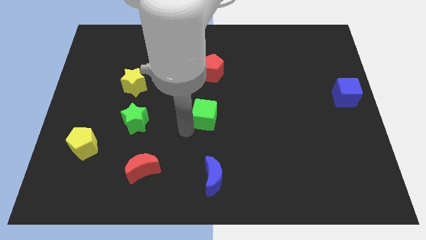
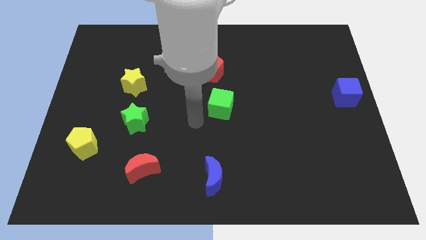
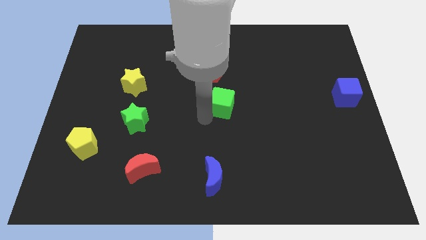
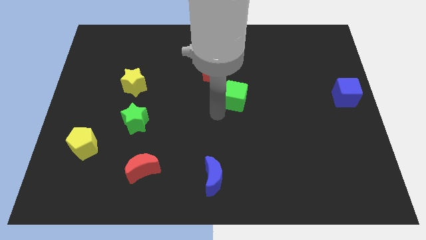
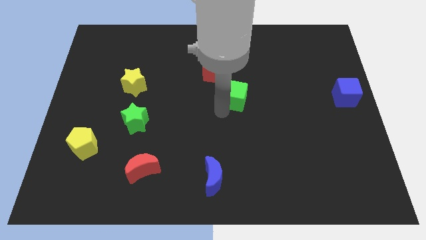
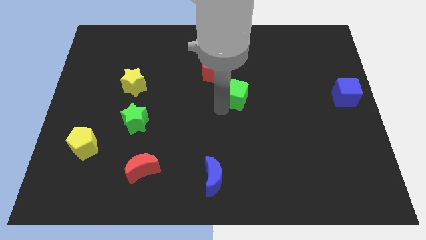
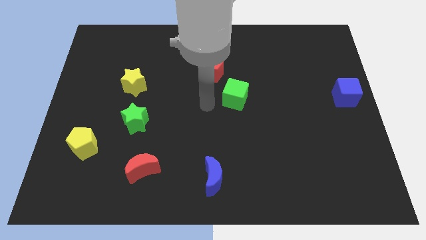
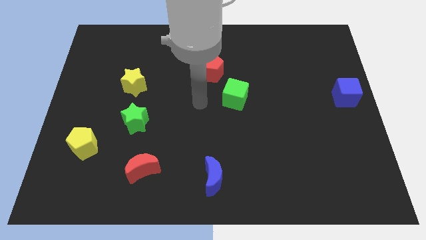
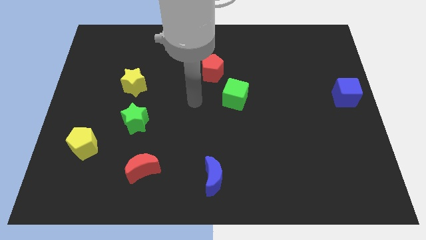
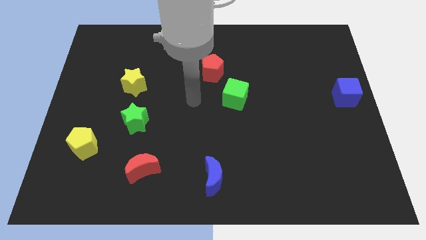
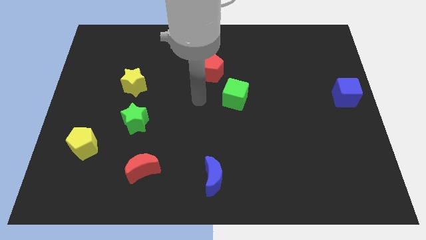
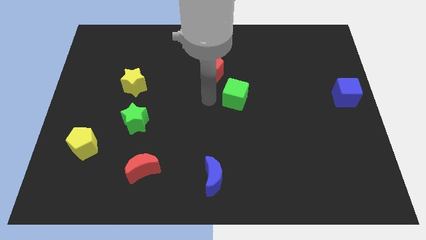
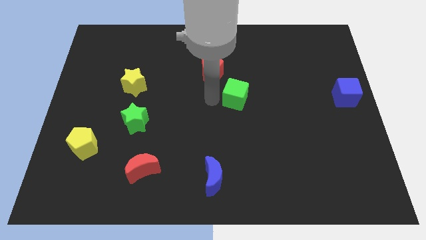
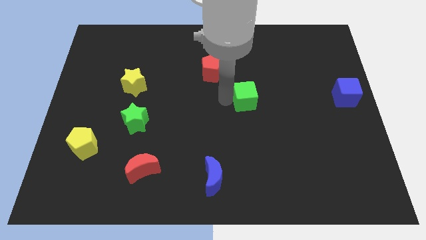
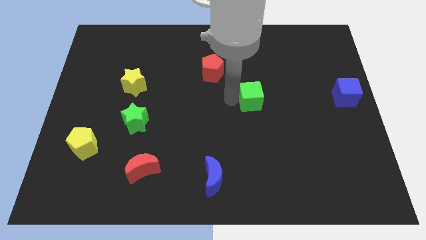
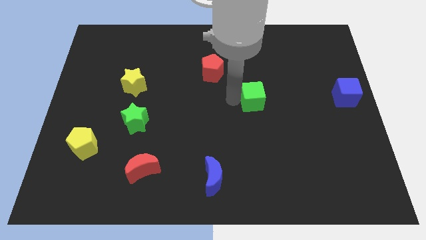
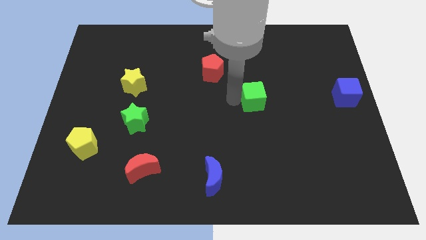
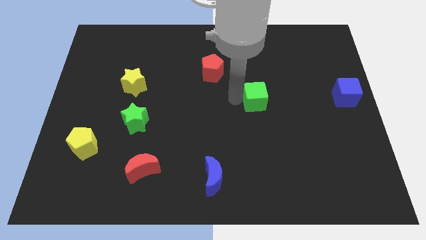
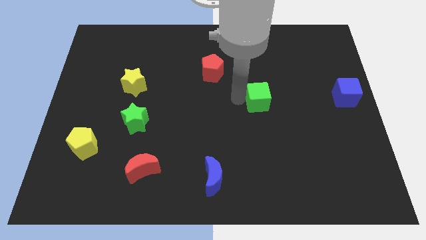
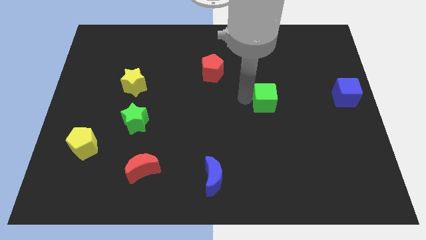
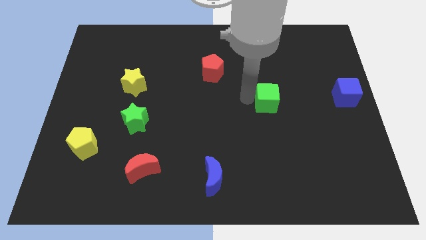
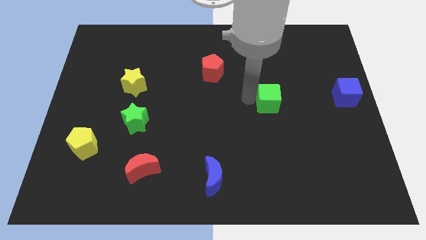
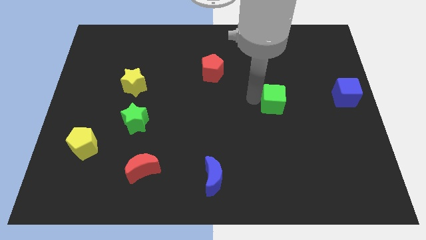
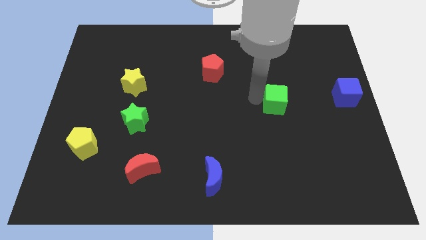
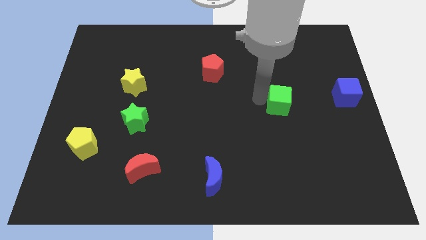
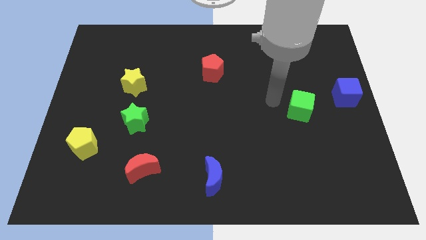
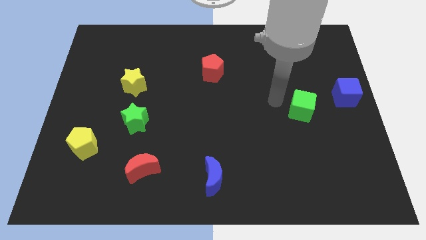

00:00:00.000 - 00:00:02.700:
push the green cube towards the left to the blue cube

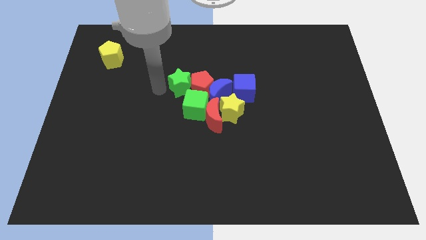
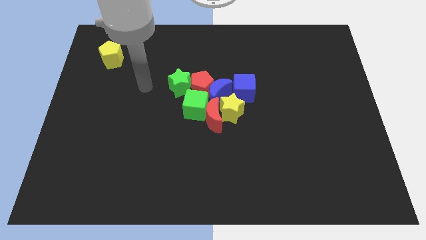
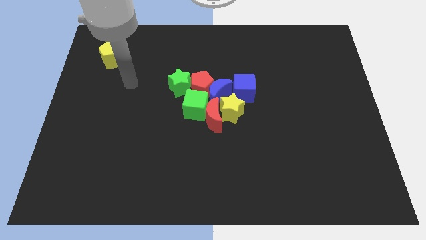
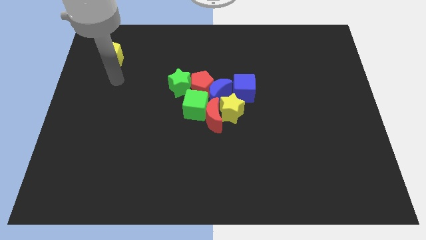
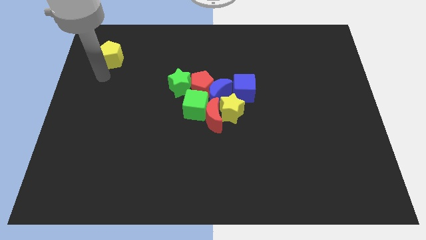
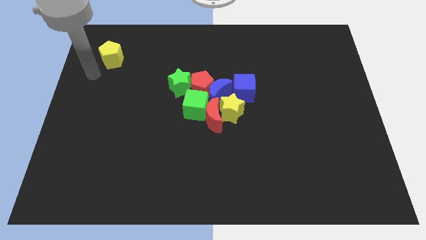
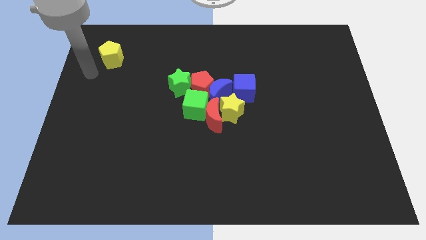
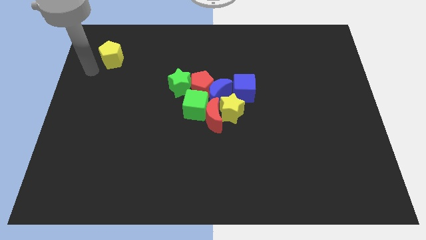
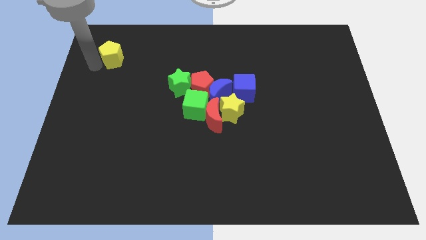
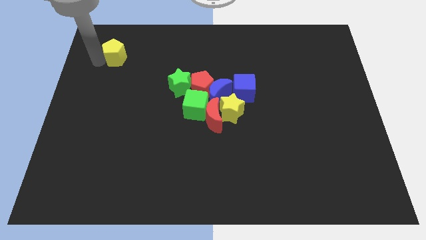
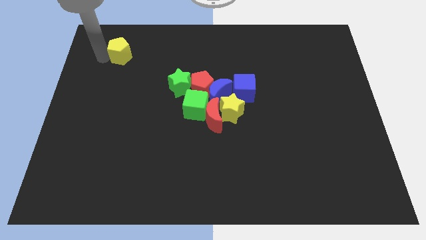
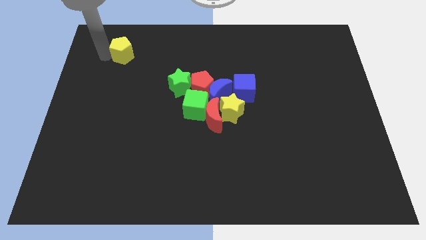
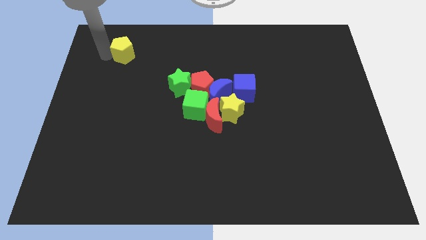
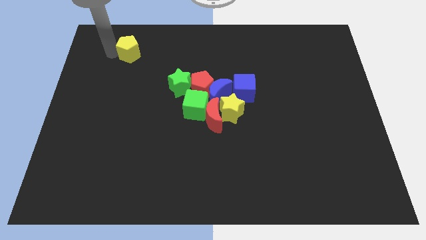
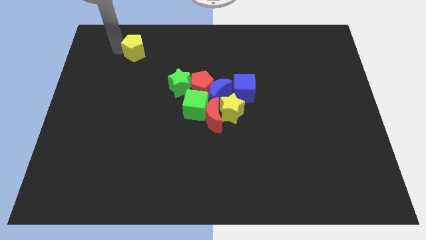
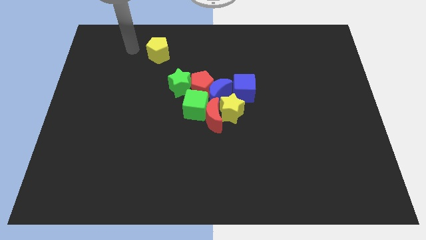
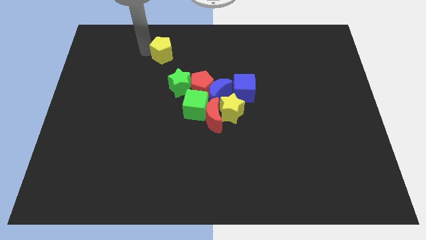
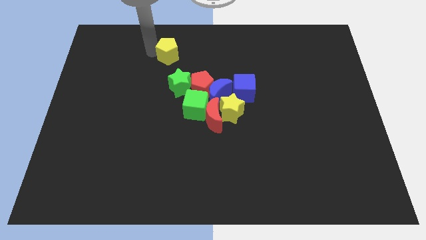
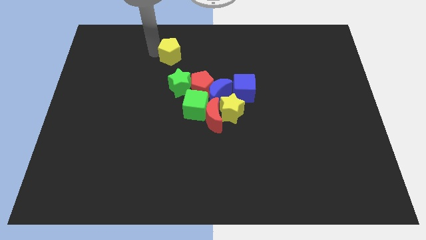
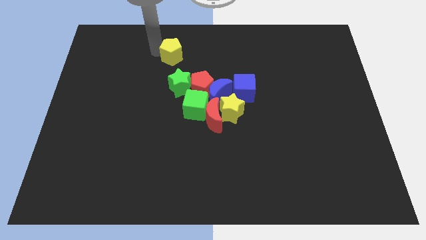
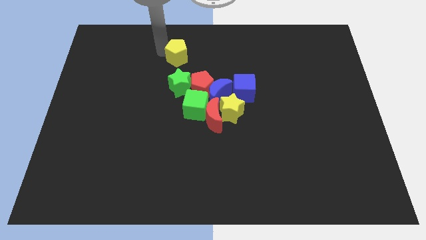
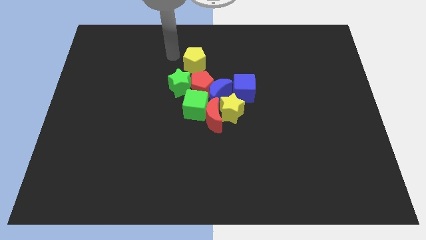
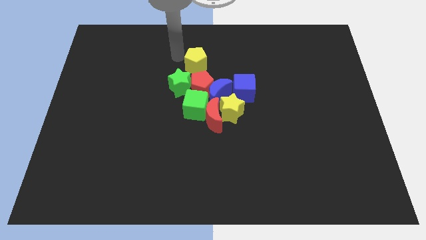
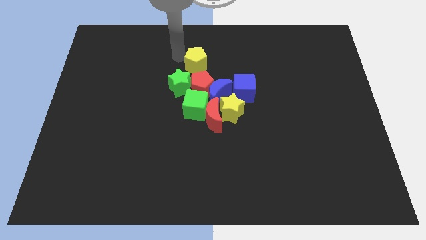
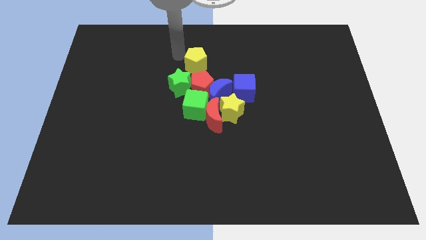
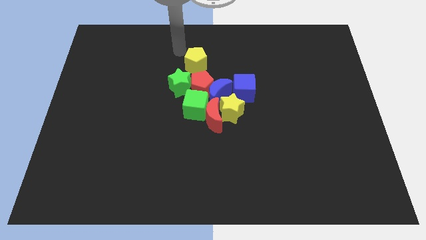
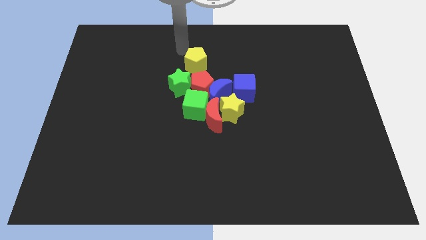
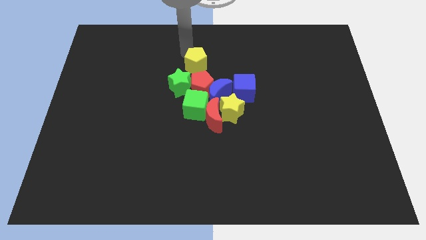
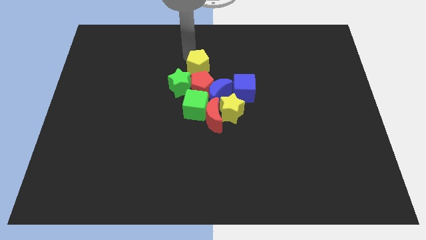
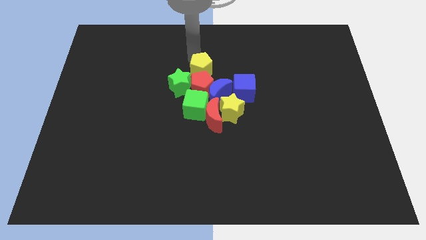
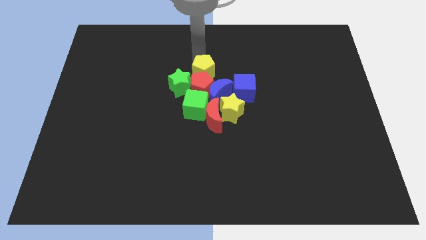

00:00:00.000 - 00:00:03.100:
place the yellow pentagon at the top of the red pentagon

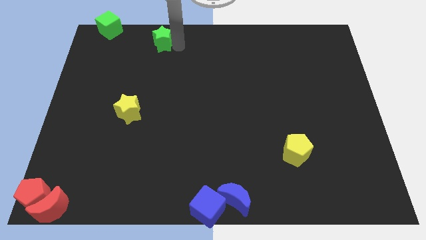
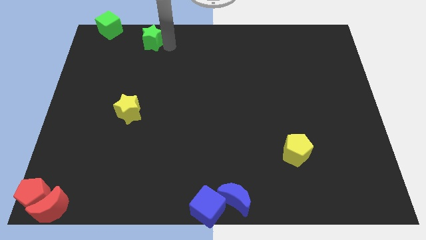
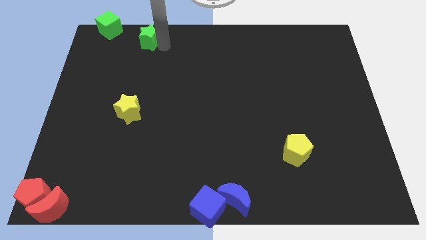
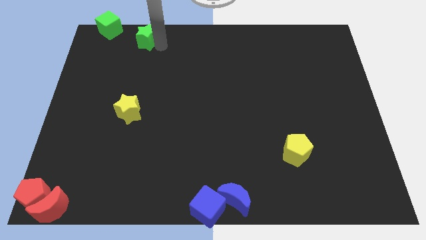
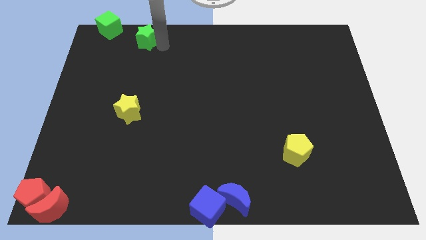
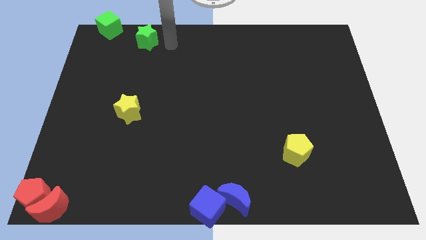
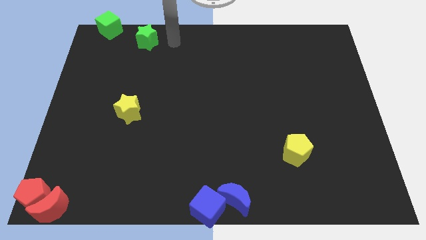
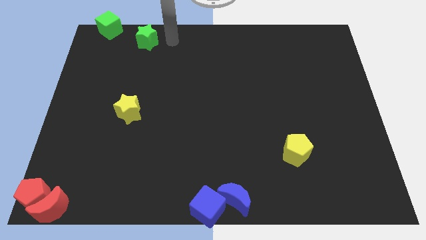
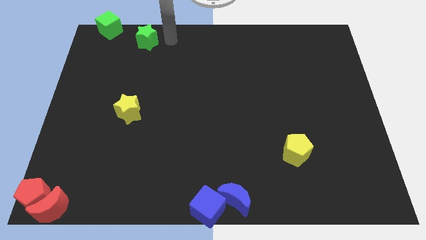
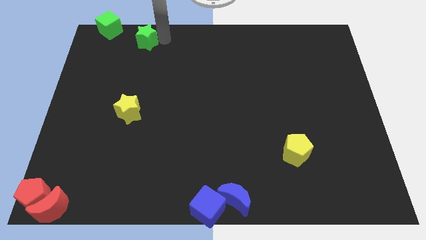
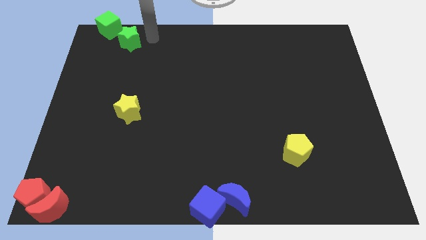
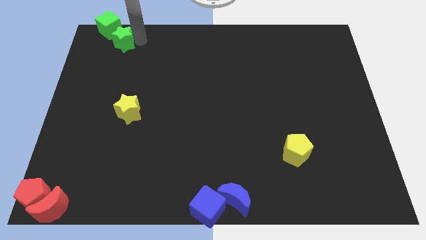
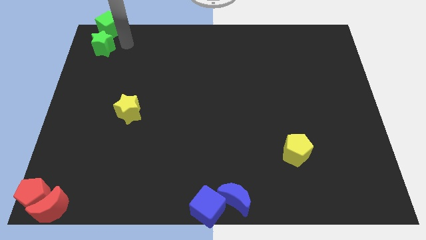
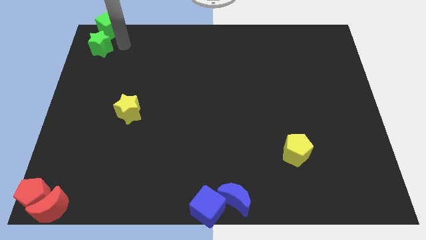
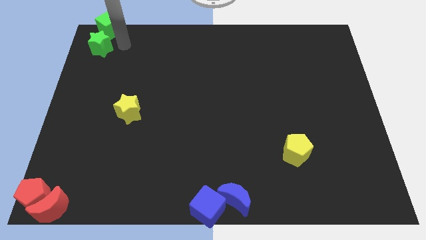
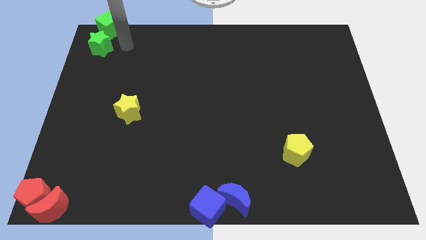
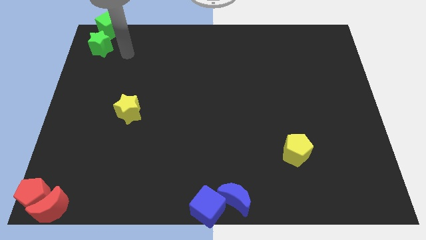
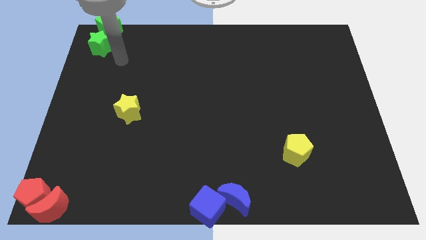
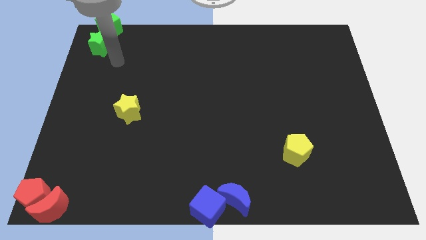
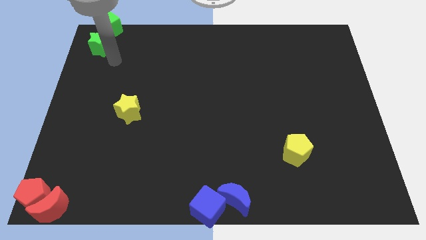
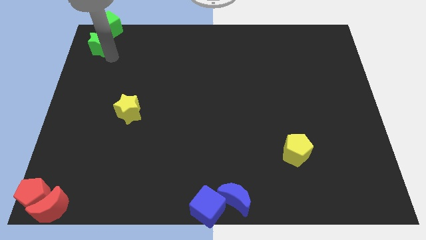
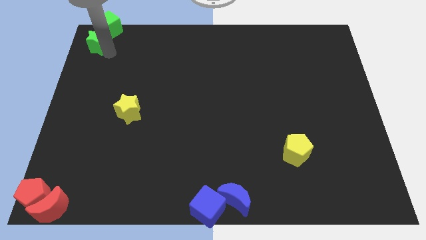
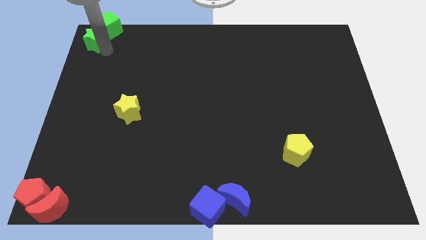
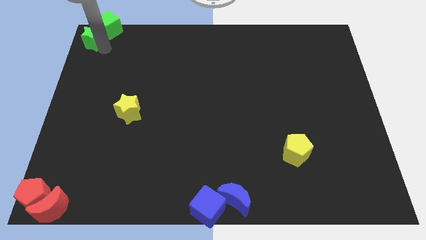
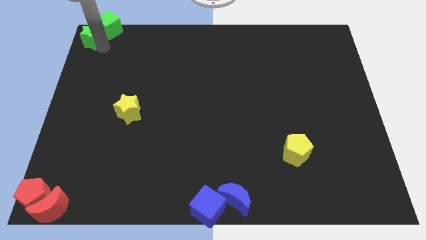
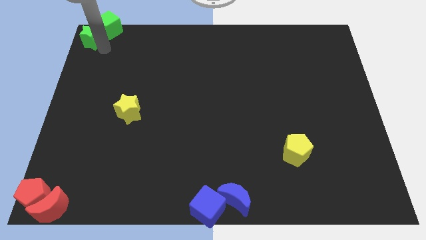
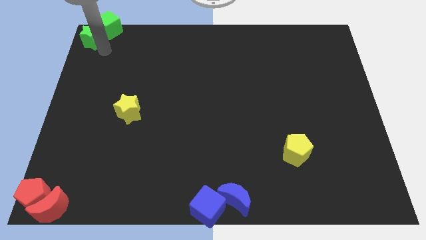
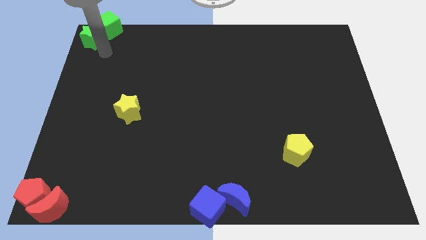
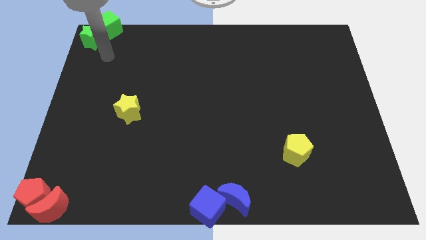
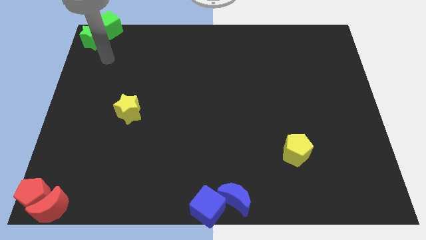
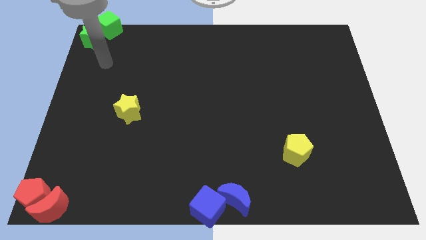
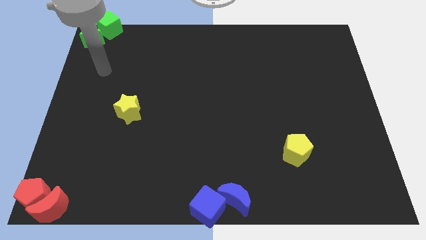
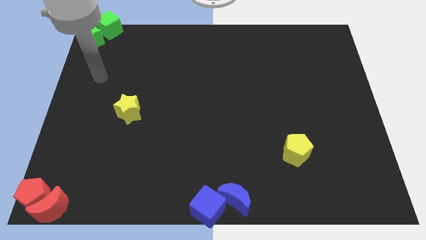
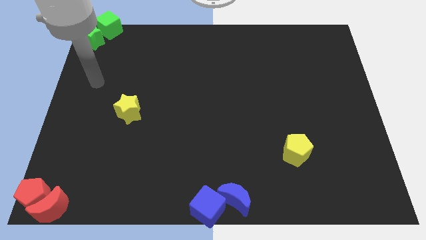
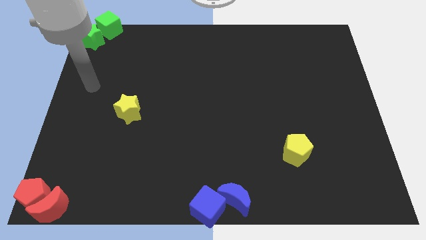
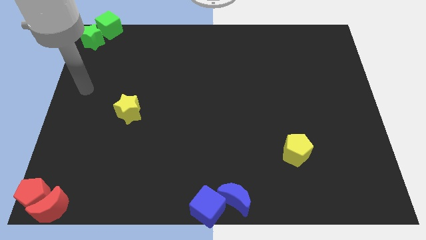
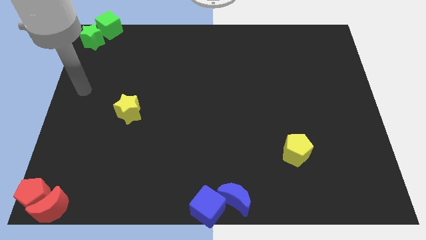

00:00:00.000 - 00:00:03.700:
push the green star to the top left corner of the board
